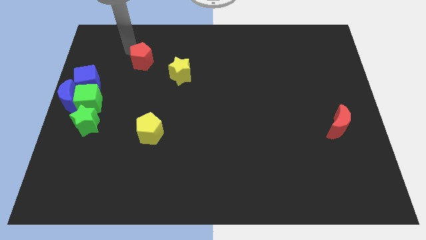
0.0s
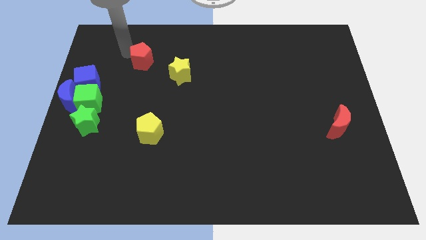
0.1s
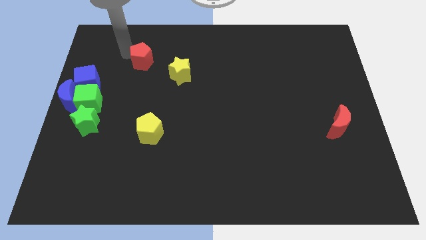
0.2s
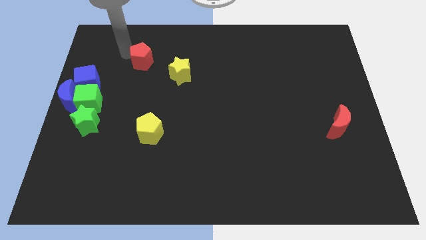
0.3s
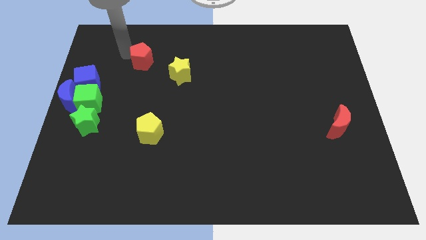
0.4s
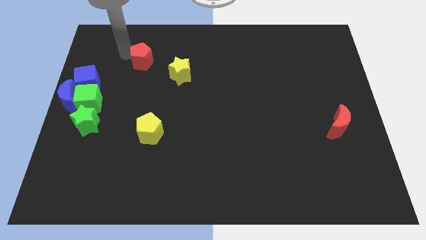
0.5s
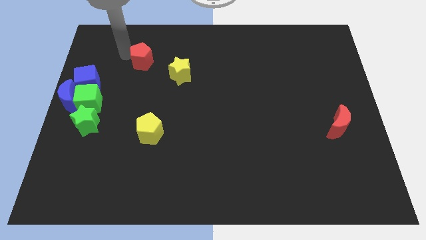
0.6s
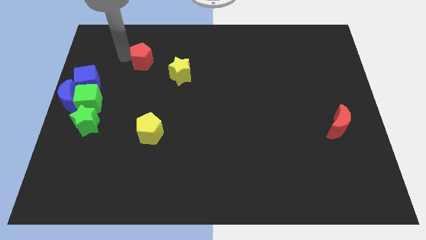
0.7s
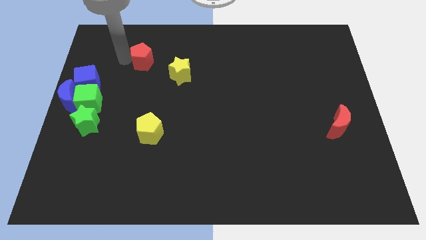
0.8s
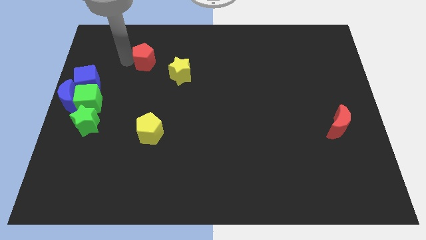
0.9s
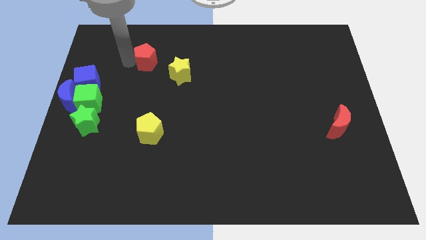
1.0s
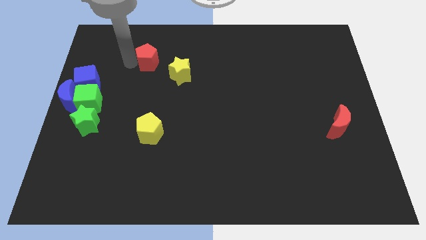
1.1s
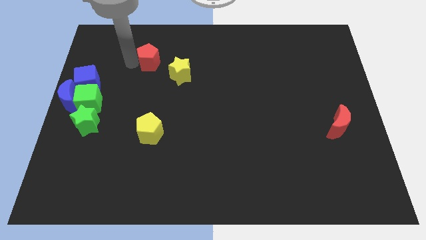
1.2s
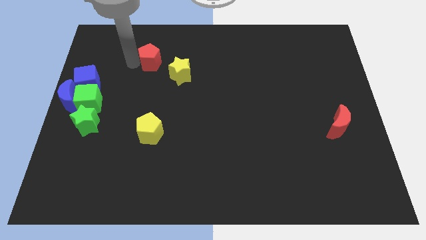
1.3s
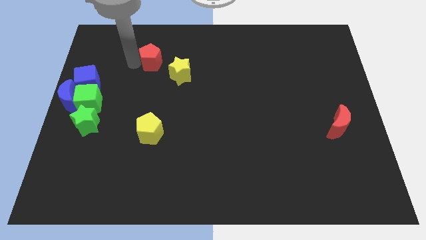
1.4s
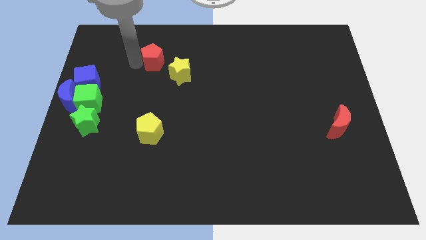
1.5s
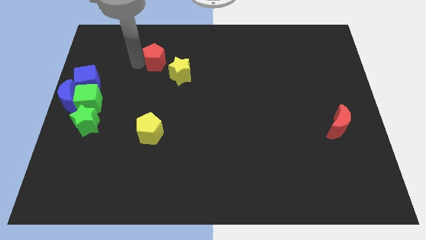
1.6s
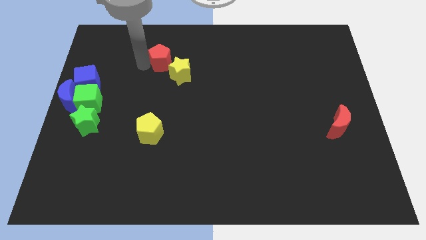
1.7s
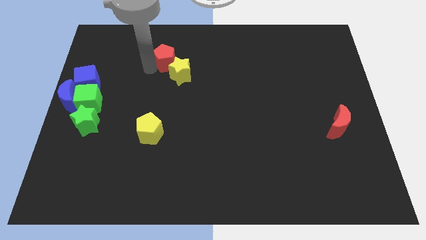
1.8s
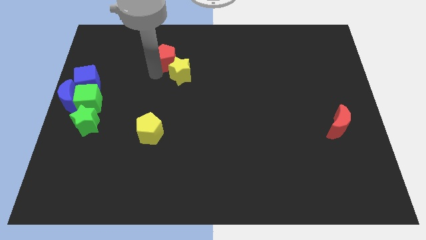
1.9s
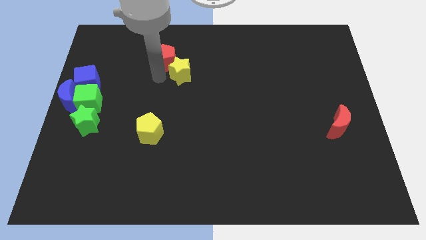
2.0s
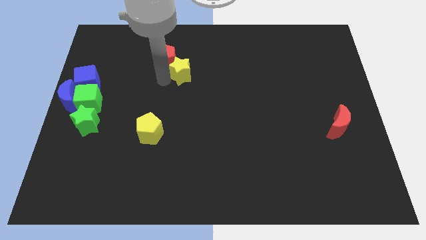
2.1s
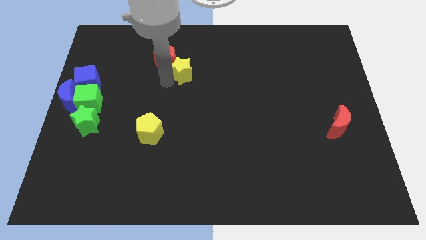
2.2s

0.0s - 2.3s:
move the red pentagon towards the yellow star

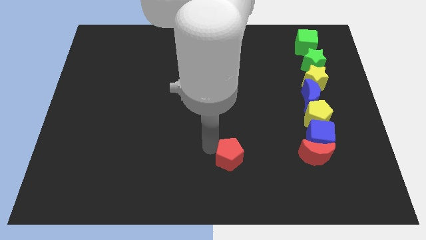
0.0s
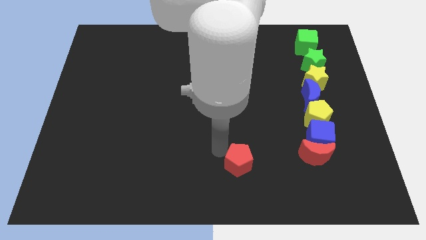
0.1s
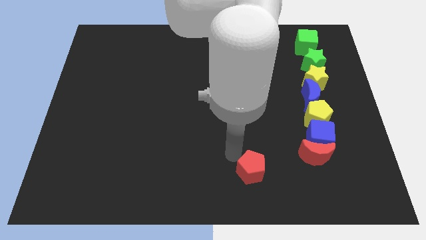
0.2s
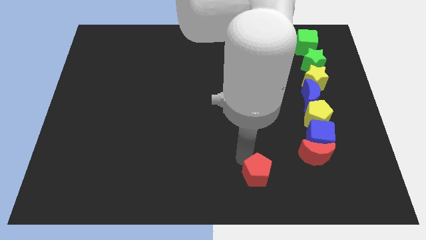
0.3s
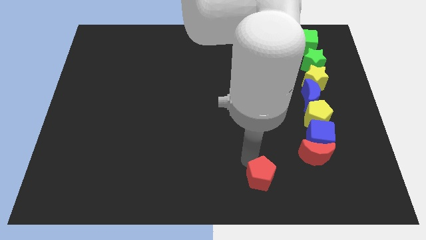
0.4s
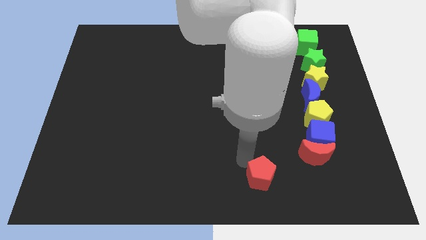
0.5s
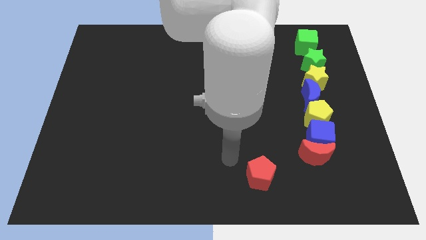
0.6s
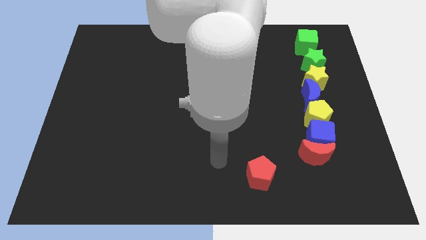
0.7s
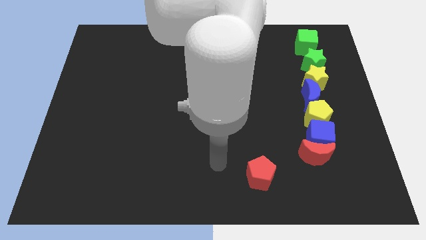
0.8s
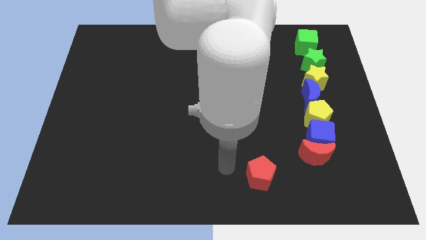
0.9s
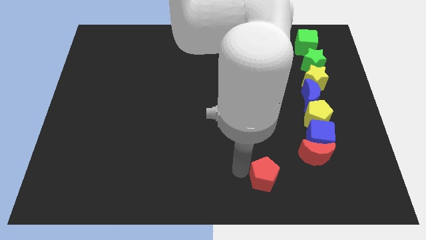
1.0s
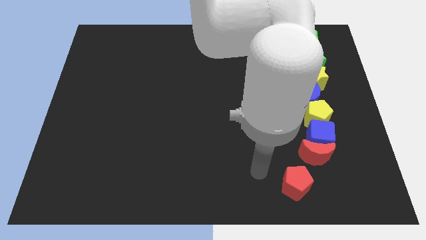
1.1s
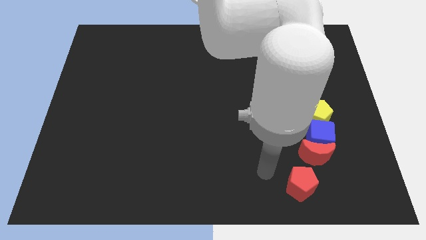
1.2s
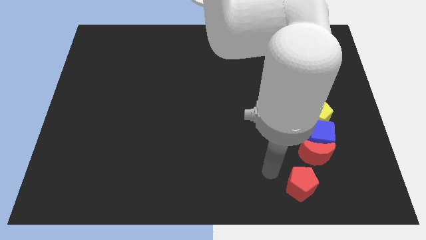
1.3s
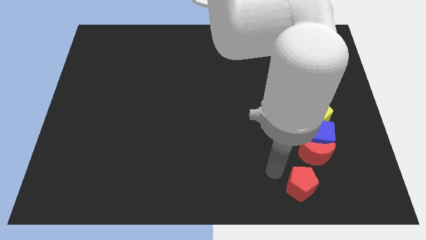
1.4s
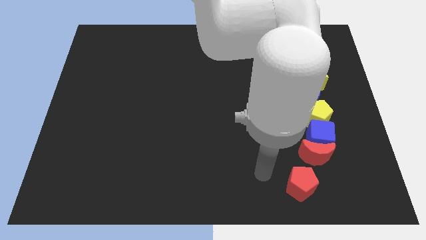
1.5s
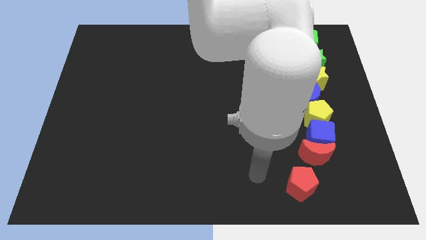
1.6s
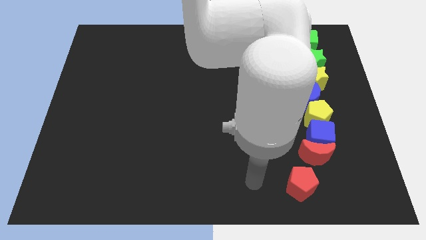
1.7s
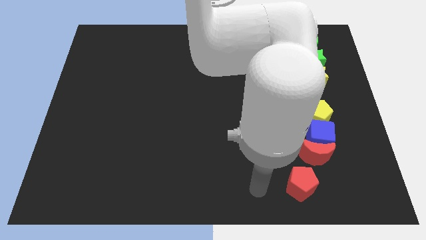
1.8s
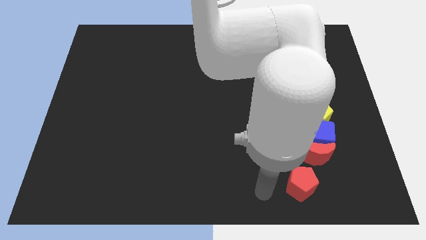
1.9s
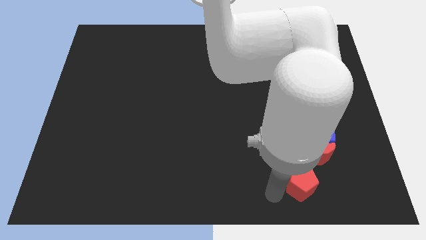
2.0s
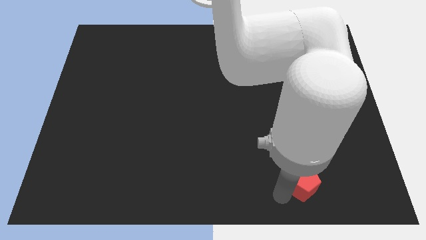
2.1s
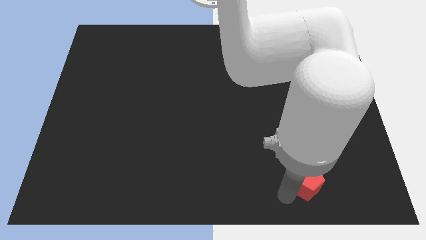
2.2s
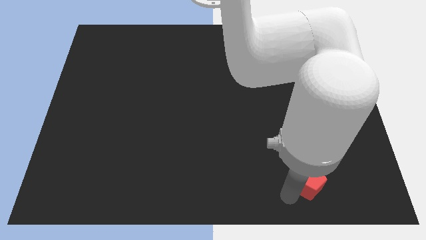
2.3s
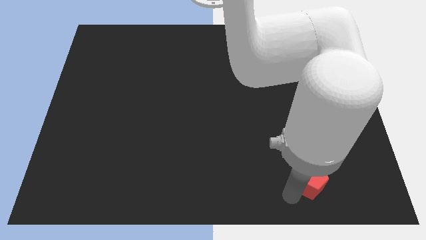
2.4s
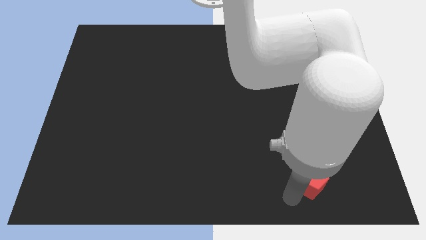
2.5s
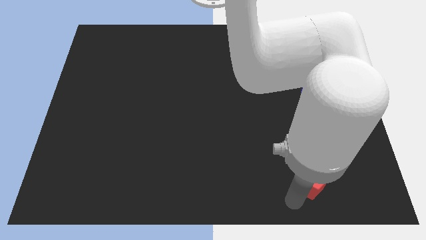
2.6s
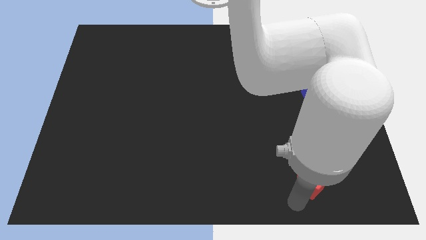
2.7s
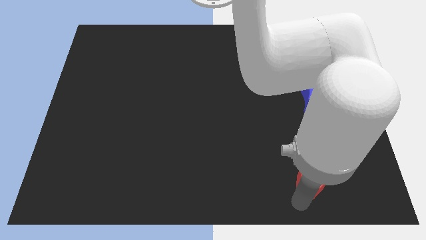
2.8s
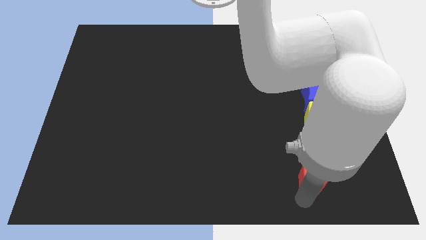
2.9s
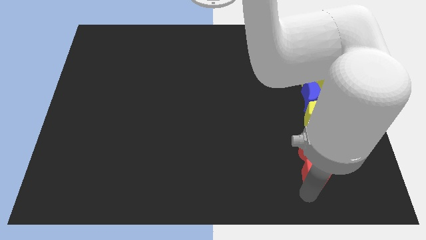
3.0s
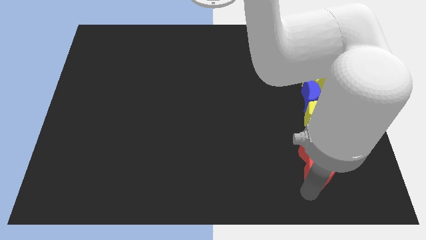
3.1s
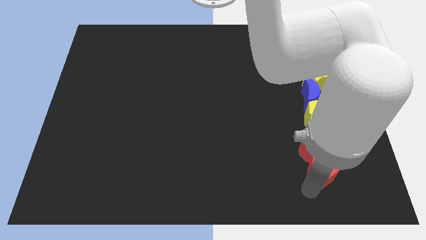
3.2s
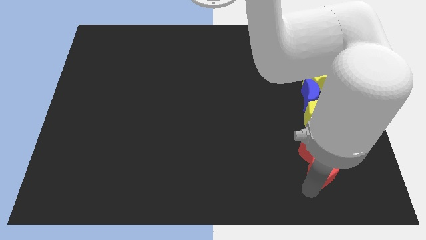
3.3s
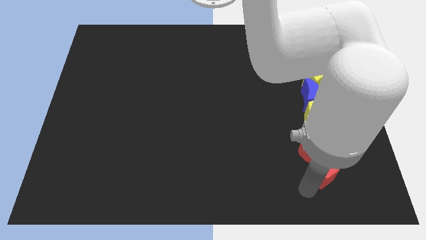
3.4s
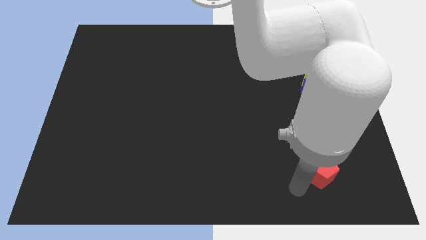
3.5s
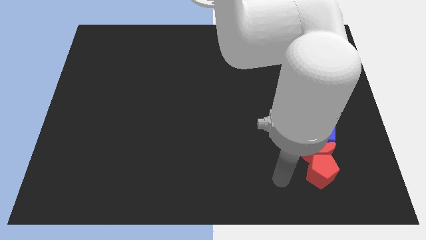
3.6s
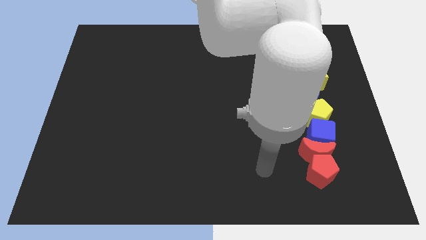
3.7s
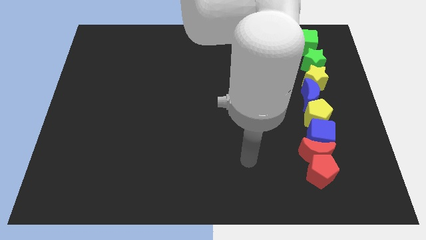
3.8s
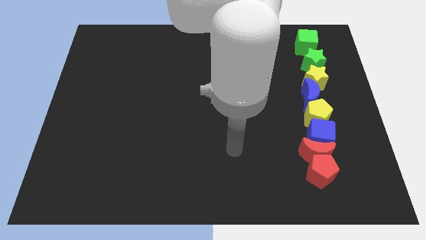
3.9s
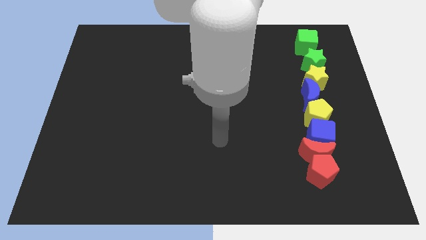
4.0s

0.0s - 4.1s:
place the red pentagon at the bottom of the red crescent

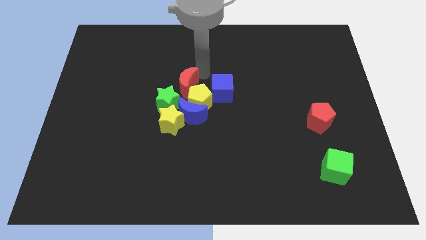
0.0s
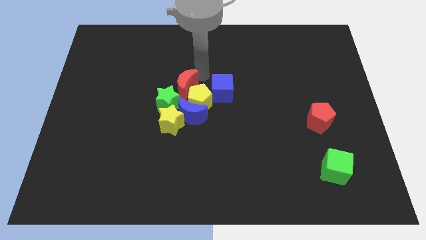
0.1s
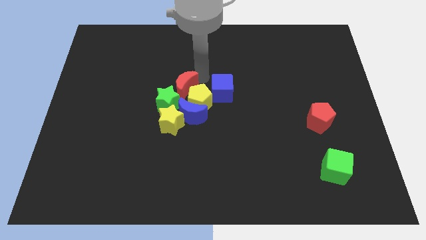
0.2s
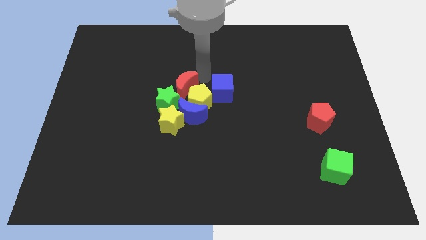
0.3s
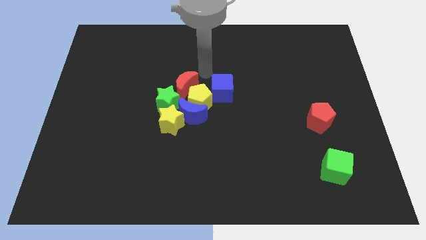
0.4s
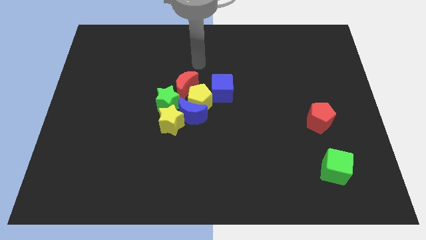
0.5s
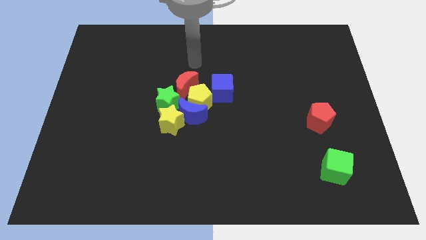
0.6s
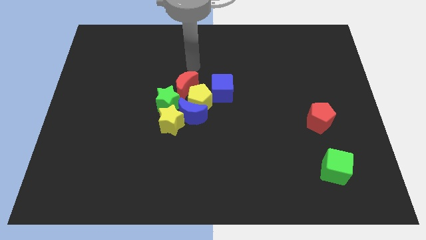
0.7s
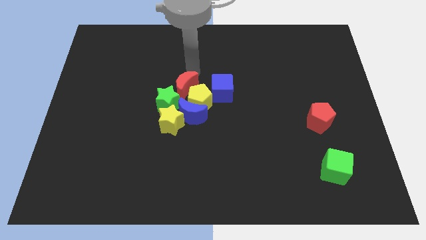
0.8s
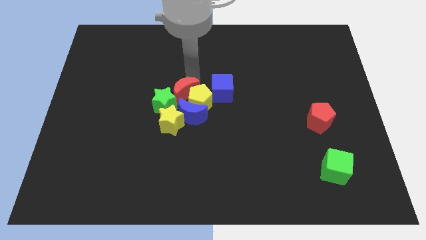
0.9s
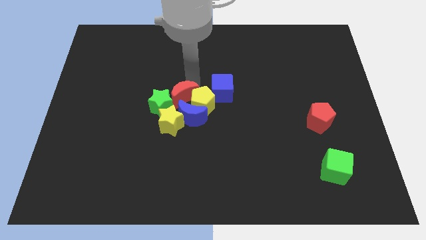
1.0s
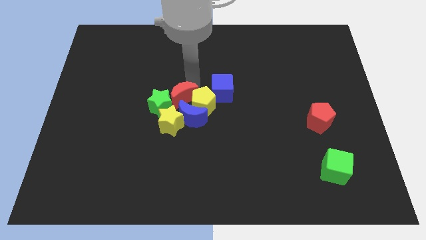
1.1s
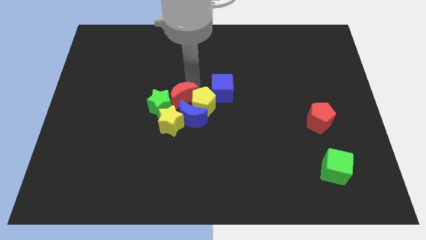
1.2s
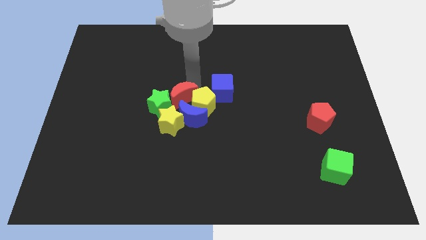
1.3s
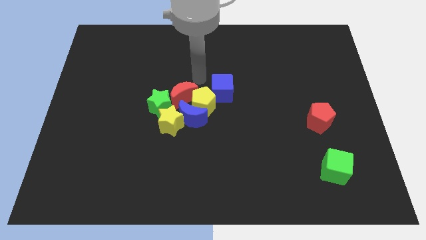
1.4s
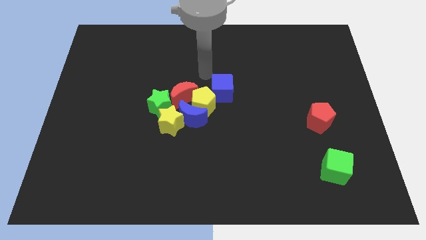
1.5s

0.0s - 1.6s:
slide the red crescent slightly towards down

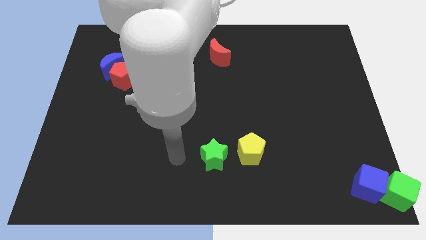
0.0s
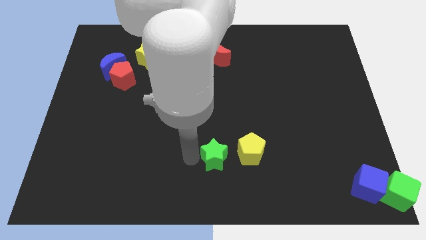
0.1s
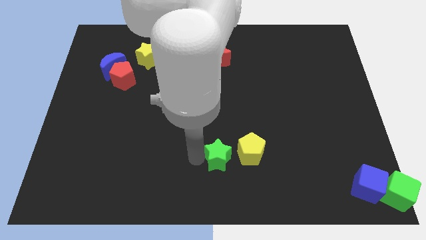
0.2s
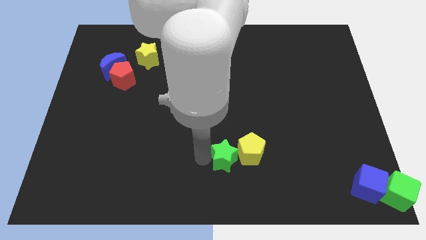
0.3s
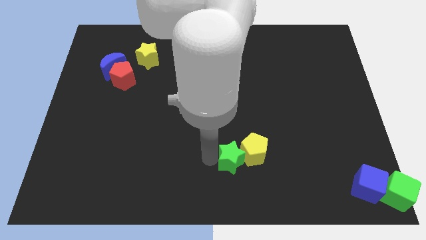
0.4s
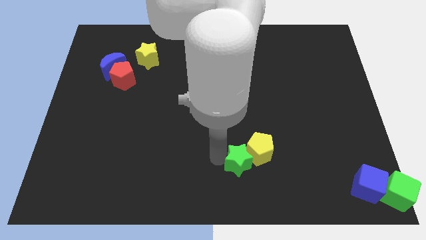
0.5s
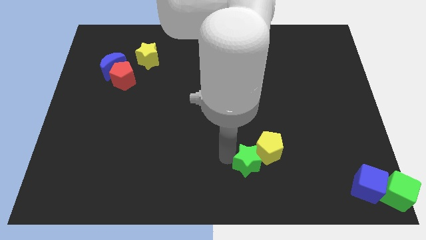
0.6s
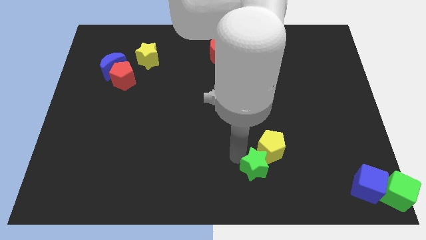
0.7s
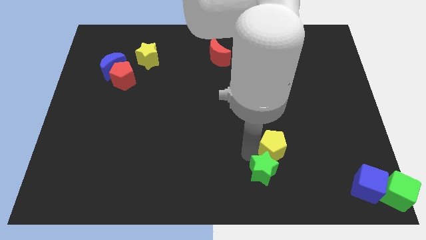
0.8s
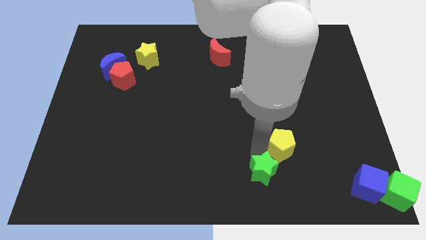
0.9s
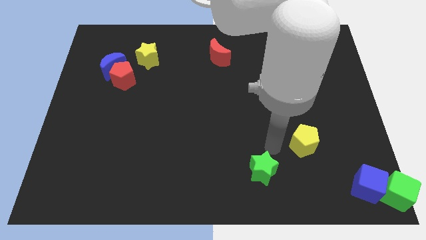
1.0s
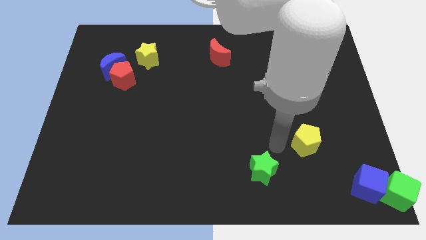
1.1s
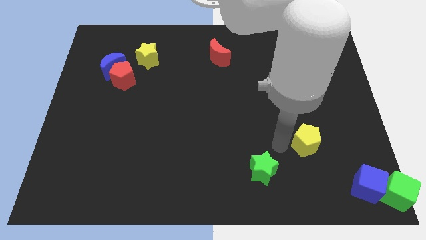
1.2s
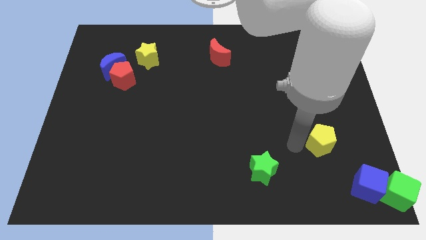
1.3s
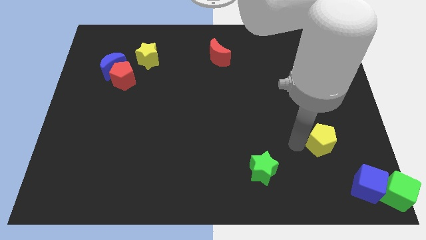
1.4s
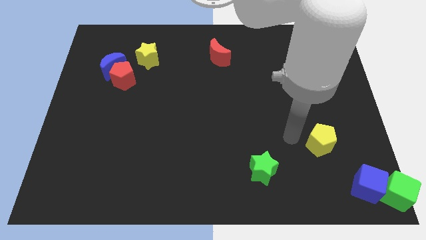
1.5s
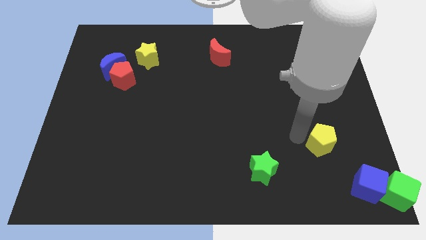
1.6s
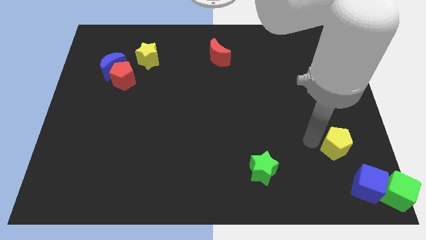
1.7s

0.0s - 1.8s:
move the yellow pentagon away from the green star
